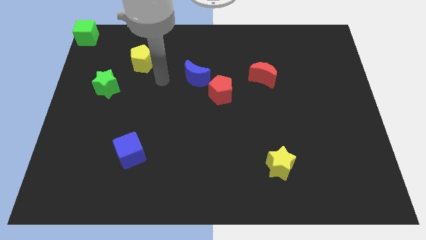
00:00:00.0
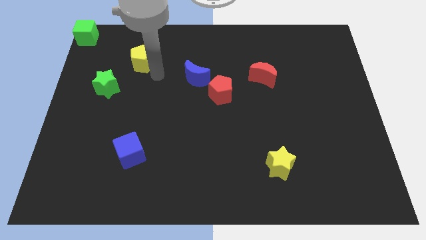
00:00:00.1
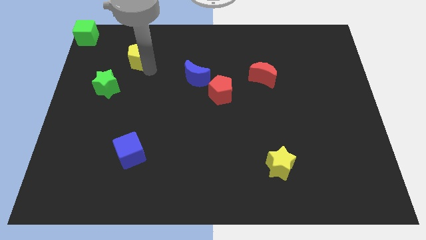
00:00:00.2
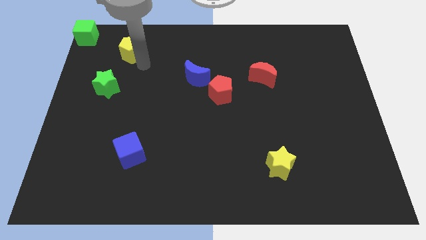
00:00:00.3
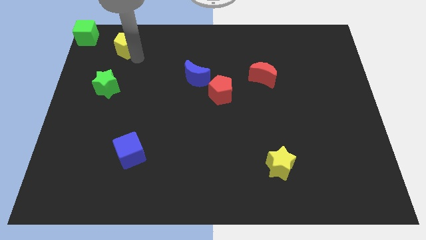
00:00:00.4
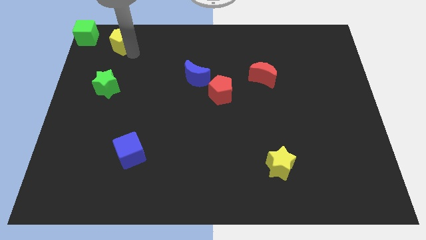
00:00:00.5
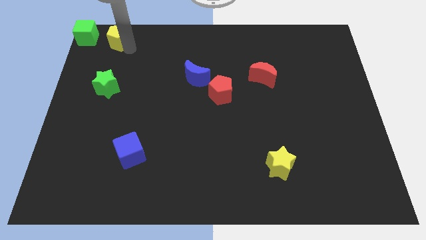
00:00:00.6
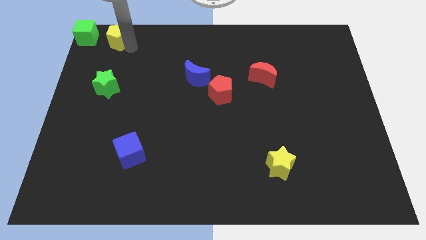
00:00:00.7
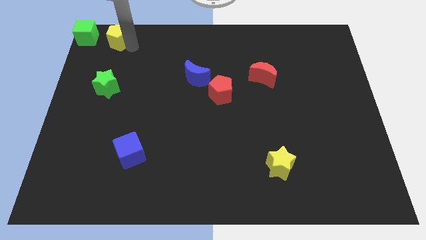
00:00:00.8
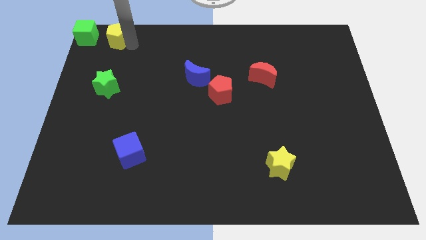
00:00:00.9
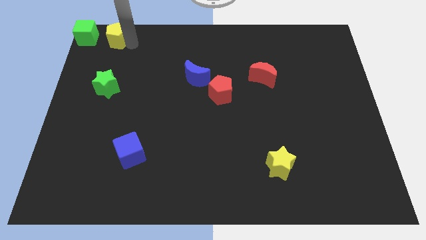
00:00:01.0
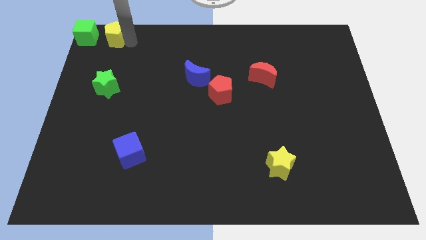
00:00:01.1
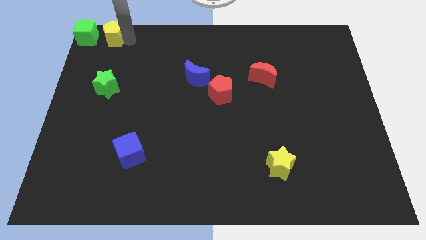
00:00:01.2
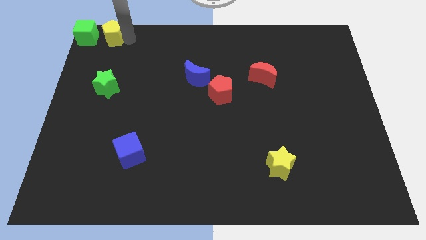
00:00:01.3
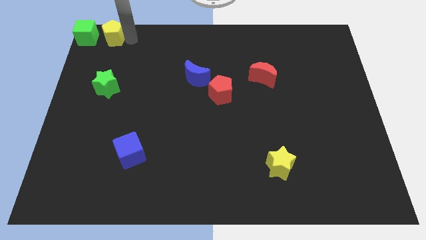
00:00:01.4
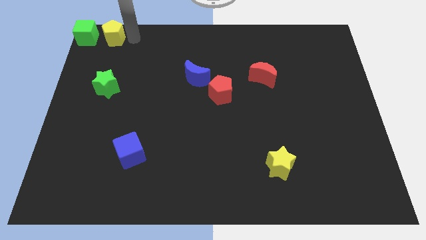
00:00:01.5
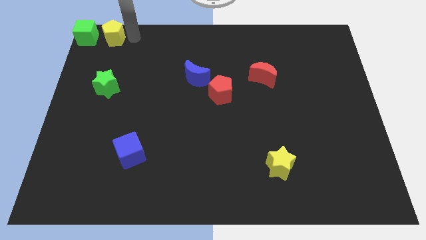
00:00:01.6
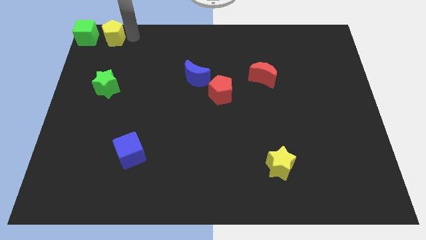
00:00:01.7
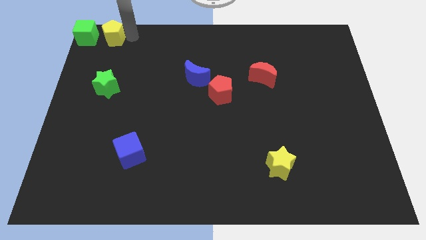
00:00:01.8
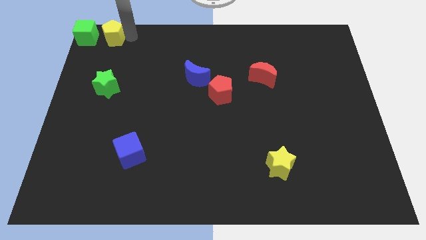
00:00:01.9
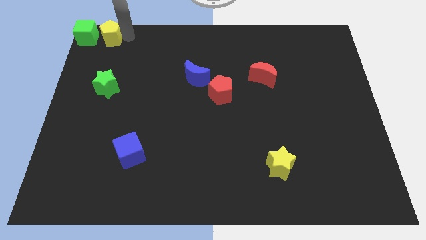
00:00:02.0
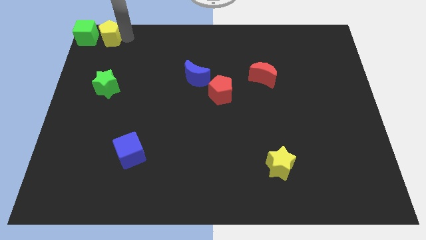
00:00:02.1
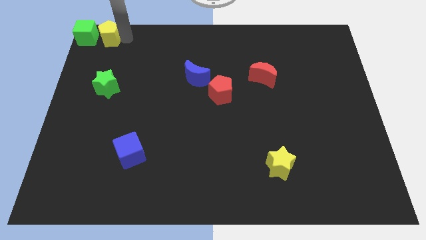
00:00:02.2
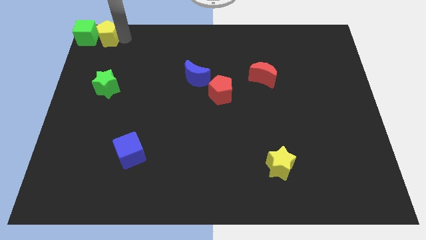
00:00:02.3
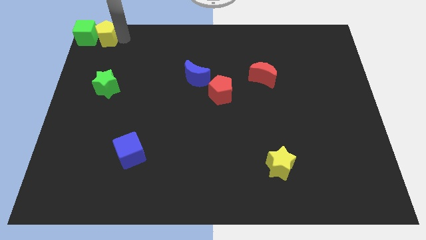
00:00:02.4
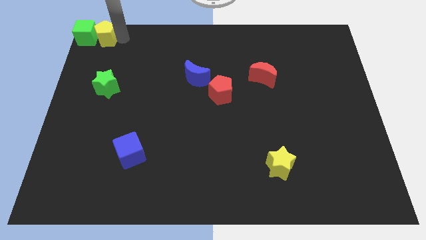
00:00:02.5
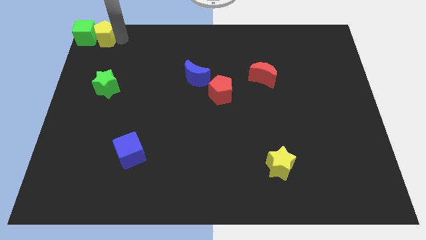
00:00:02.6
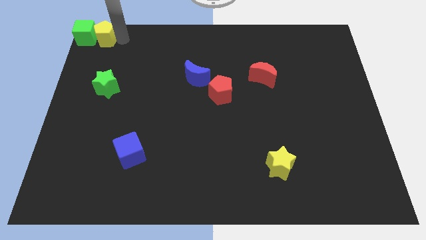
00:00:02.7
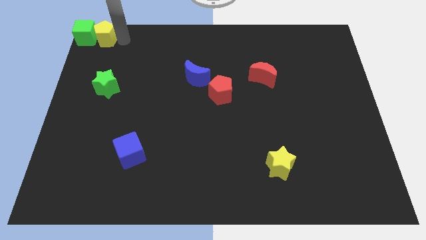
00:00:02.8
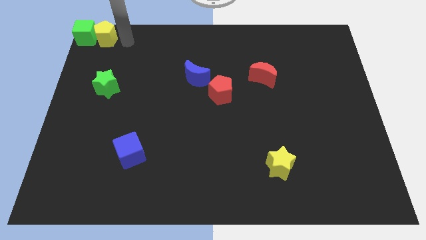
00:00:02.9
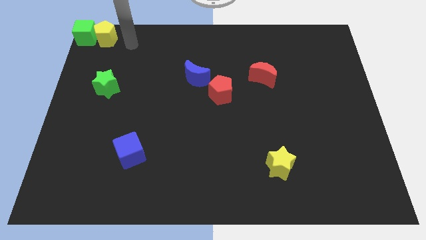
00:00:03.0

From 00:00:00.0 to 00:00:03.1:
move the yellow pentagon into the green cube to the top left corner

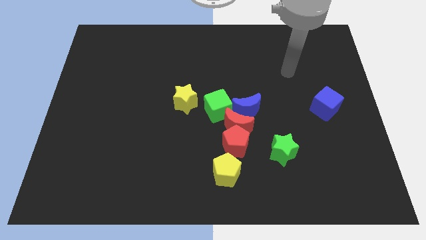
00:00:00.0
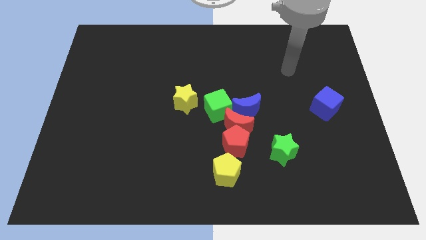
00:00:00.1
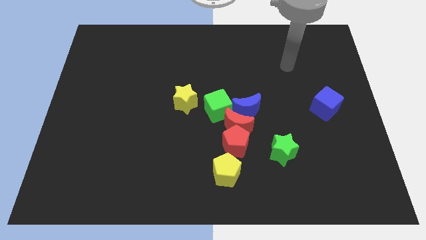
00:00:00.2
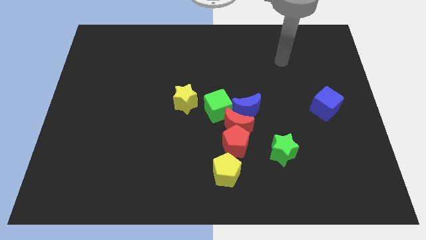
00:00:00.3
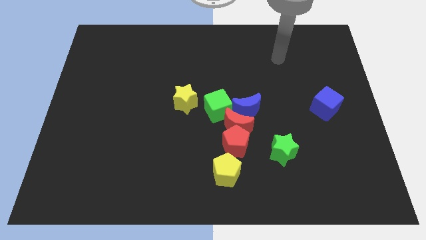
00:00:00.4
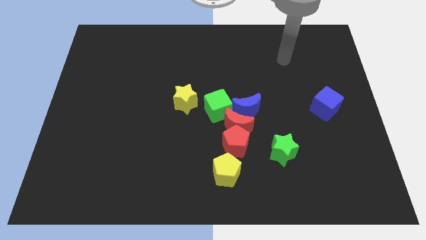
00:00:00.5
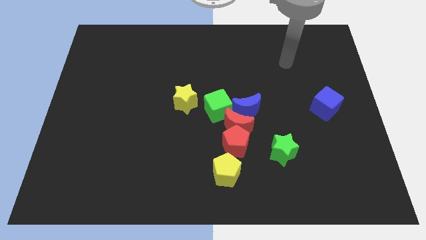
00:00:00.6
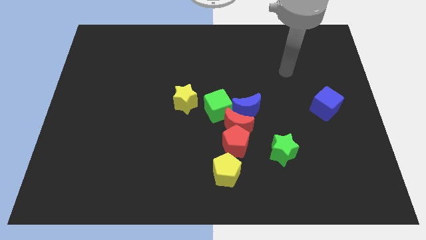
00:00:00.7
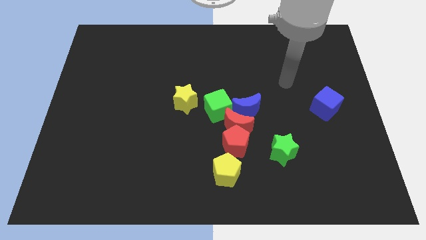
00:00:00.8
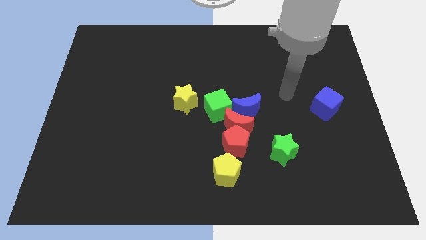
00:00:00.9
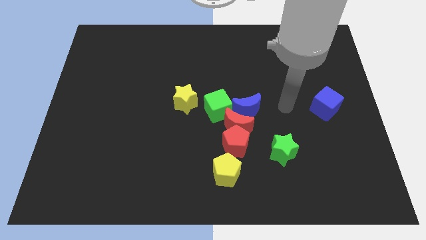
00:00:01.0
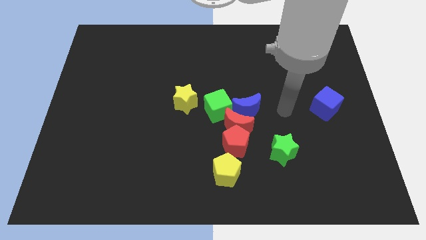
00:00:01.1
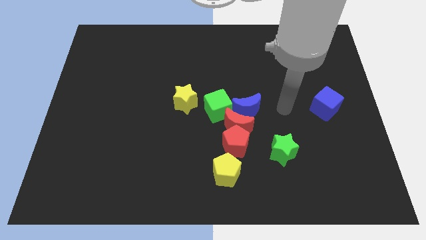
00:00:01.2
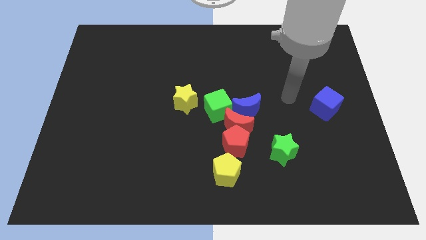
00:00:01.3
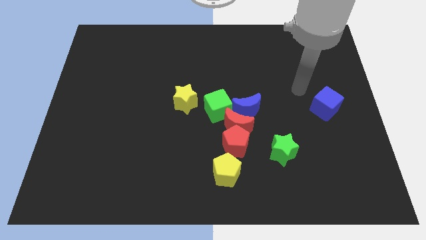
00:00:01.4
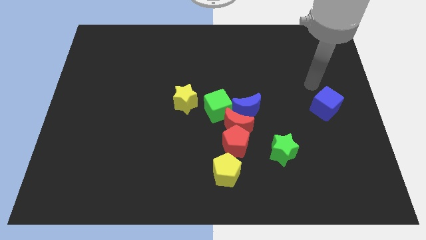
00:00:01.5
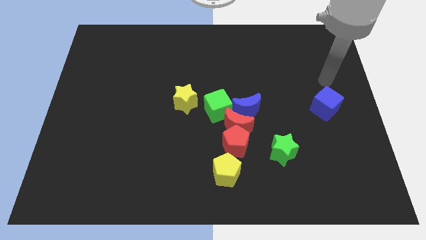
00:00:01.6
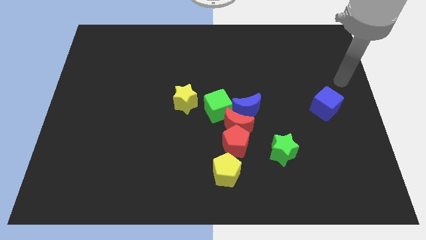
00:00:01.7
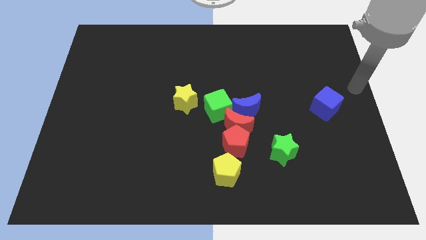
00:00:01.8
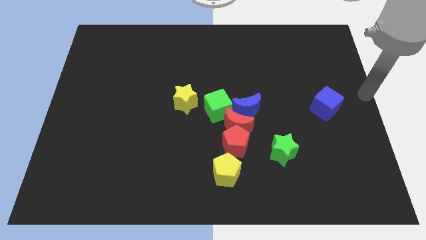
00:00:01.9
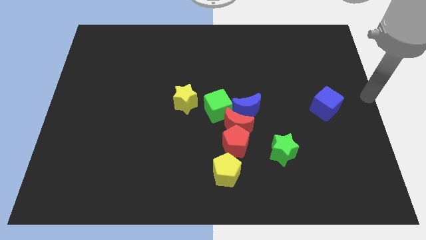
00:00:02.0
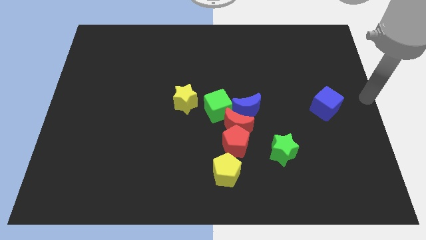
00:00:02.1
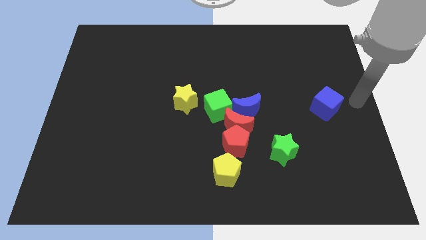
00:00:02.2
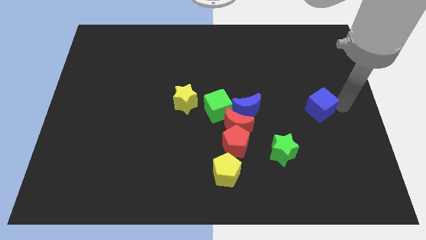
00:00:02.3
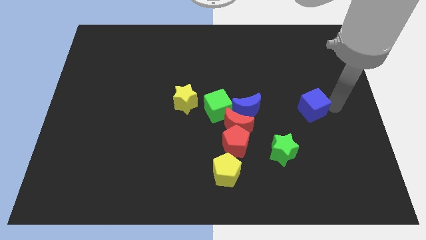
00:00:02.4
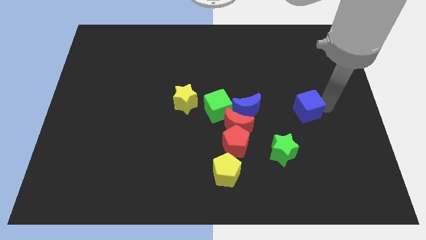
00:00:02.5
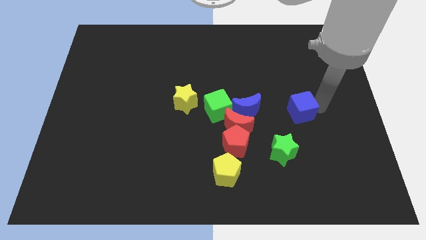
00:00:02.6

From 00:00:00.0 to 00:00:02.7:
move blue block slightly to the left

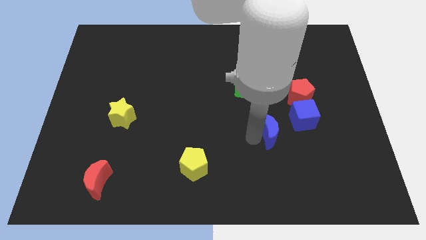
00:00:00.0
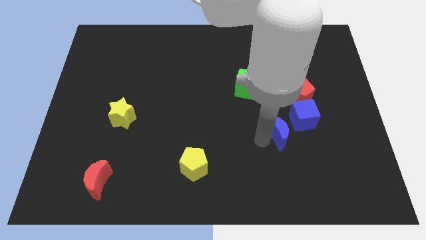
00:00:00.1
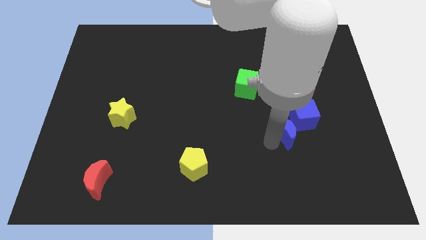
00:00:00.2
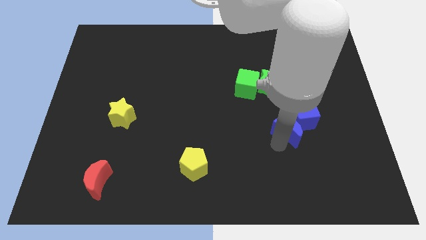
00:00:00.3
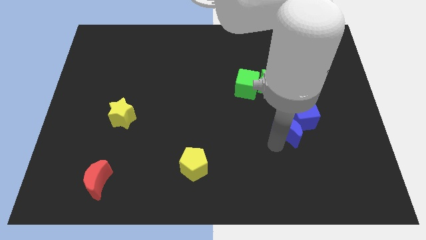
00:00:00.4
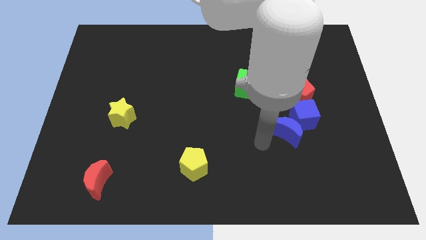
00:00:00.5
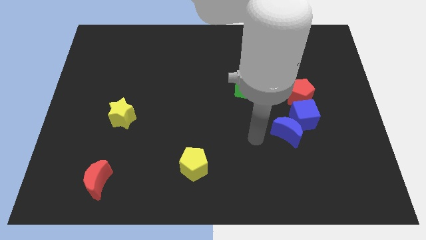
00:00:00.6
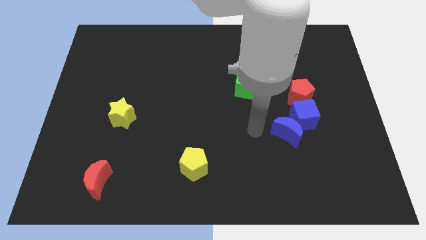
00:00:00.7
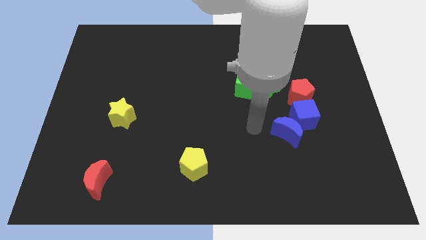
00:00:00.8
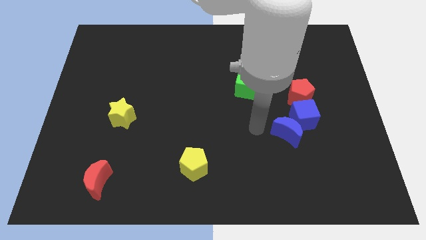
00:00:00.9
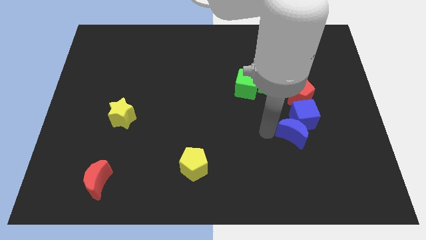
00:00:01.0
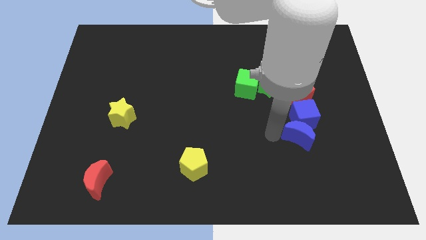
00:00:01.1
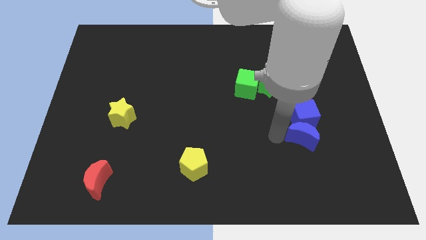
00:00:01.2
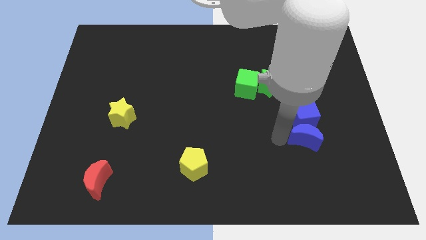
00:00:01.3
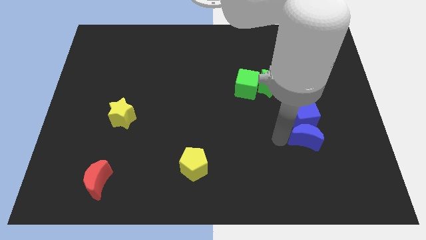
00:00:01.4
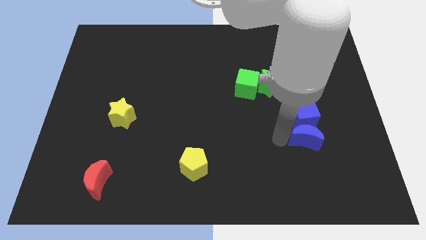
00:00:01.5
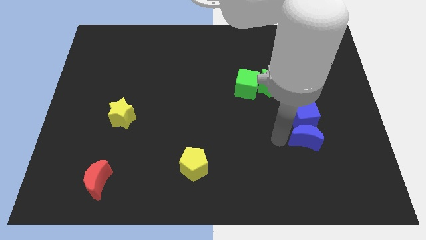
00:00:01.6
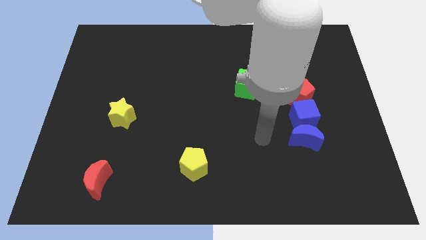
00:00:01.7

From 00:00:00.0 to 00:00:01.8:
push the blue crescent to the bottom of the blue cube

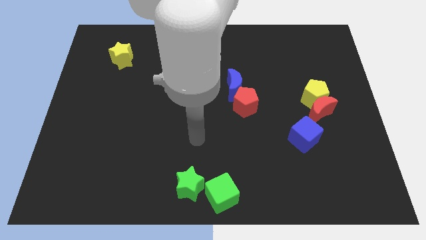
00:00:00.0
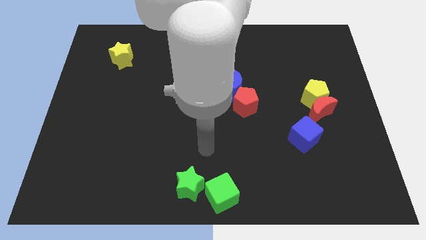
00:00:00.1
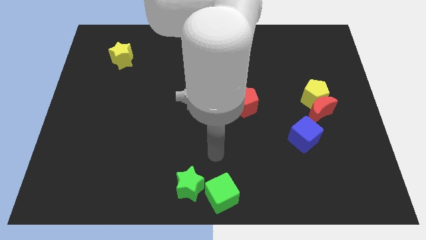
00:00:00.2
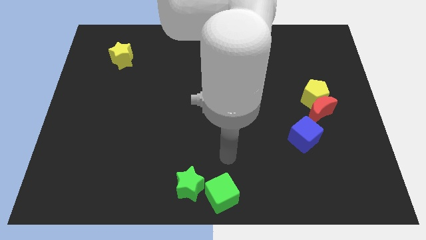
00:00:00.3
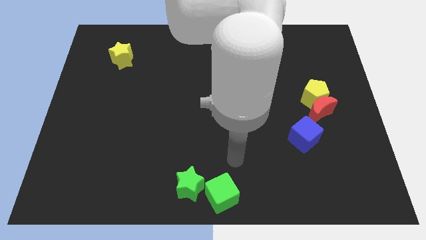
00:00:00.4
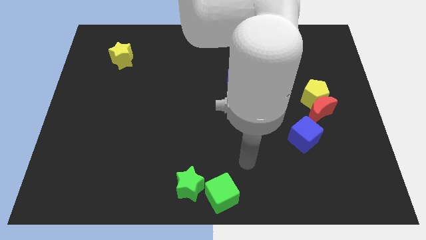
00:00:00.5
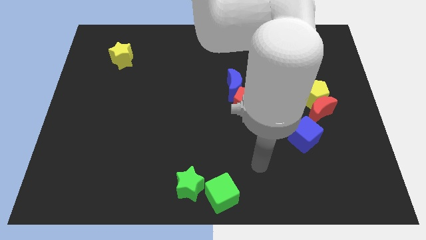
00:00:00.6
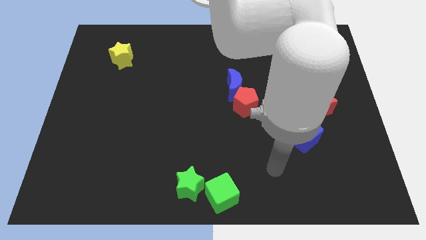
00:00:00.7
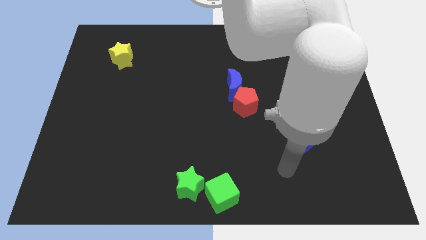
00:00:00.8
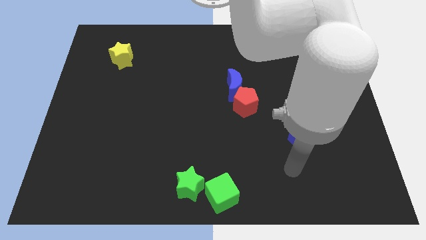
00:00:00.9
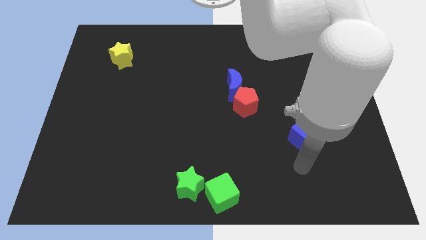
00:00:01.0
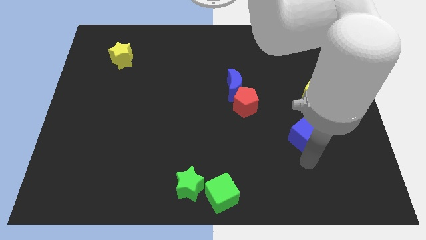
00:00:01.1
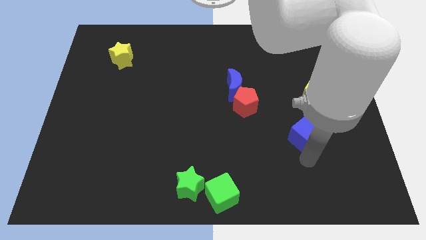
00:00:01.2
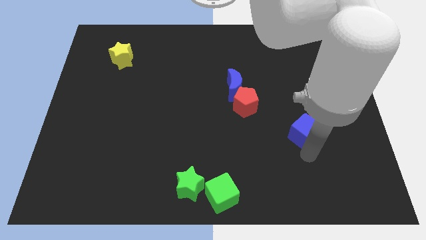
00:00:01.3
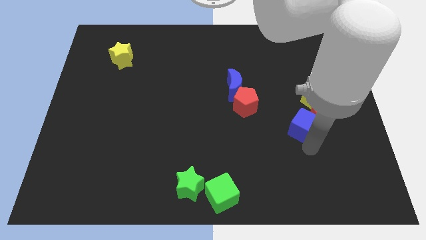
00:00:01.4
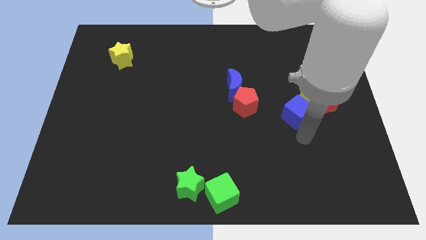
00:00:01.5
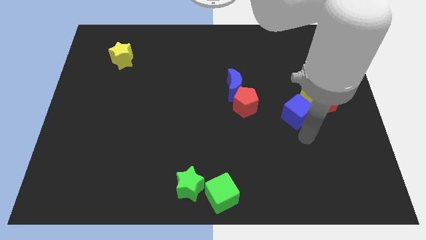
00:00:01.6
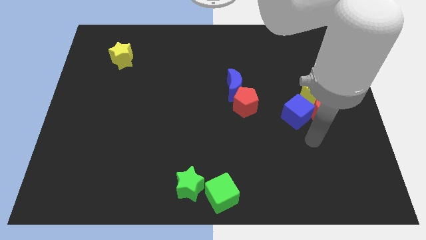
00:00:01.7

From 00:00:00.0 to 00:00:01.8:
push the blue cube up slightly
